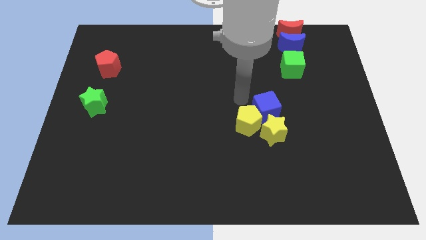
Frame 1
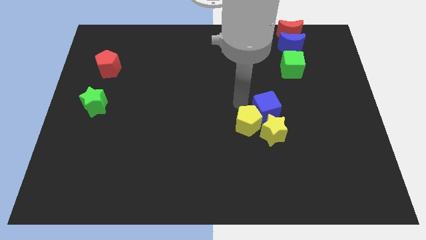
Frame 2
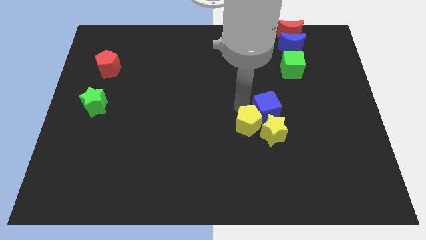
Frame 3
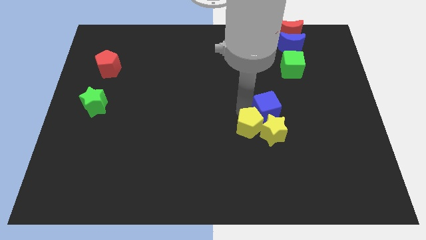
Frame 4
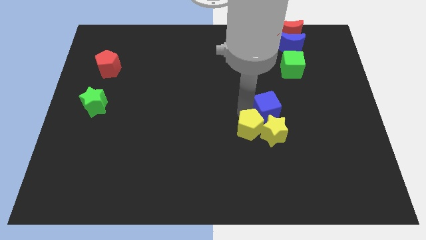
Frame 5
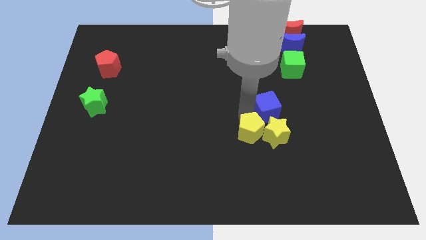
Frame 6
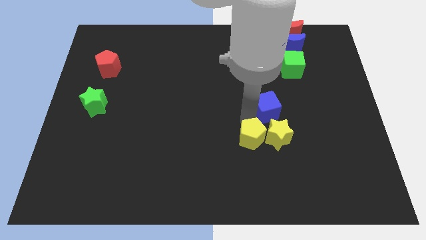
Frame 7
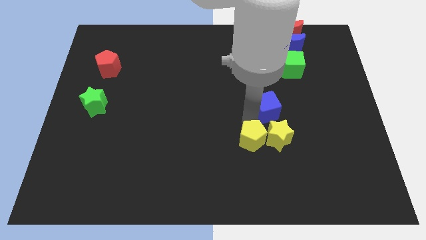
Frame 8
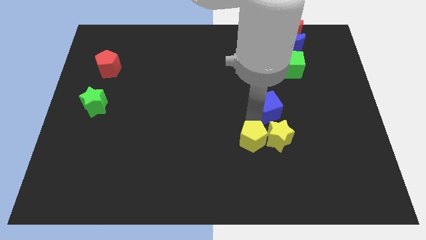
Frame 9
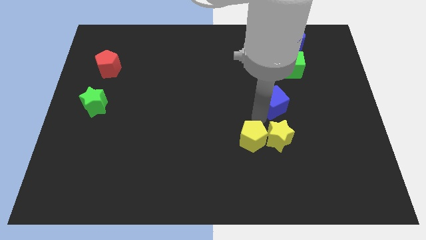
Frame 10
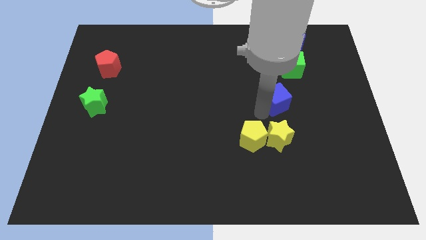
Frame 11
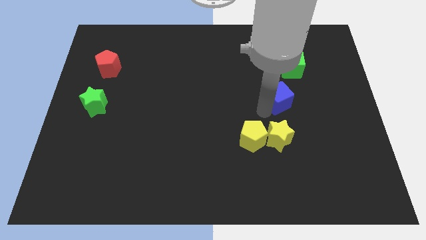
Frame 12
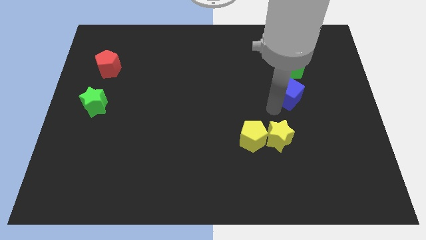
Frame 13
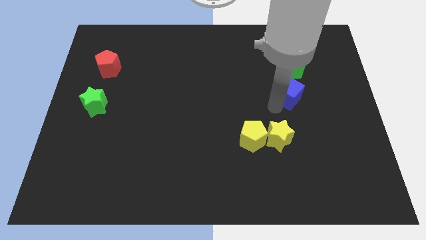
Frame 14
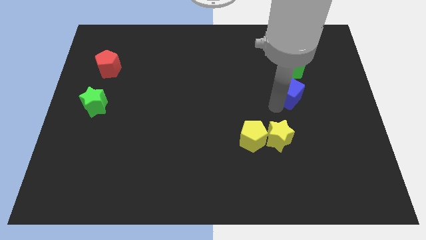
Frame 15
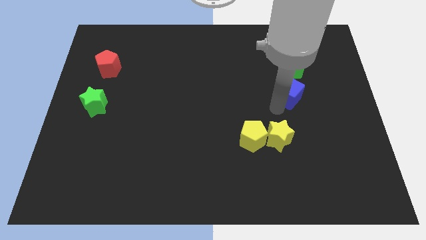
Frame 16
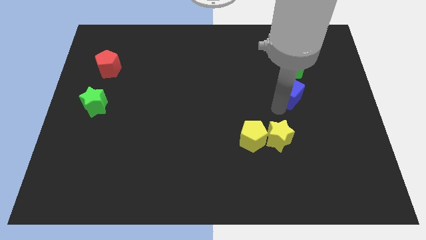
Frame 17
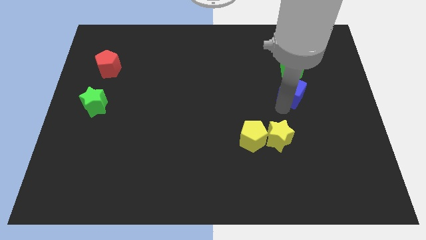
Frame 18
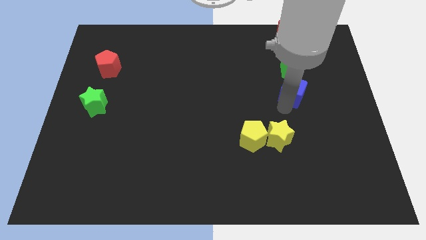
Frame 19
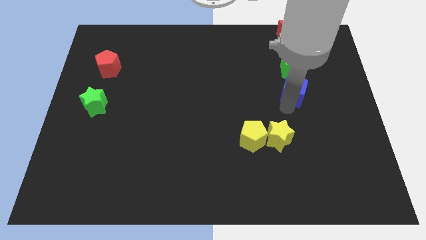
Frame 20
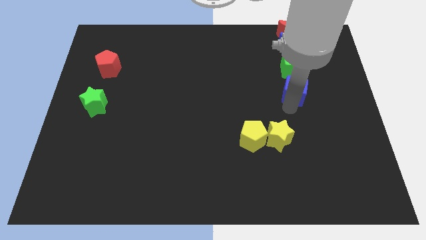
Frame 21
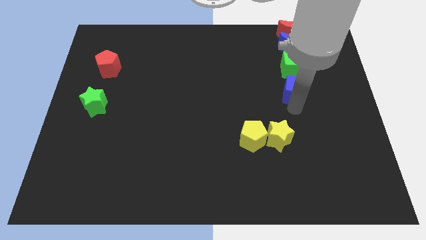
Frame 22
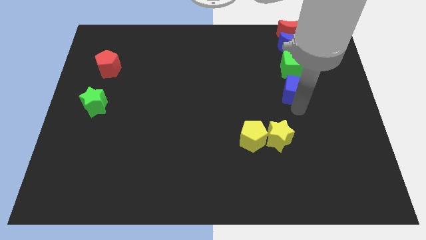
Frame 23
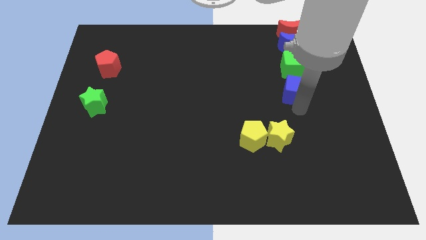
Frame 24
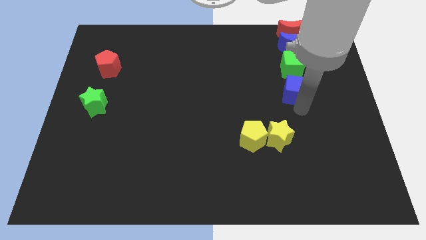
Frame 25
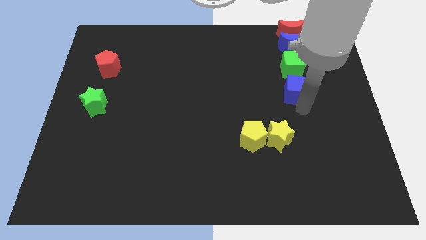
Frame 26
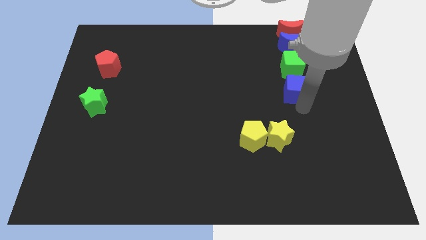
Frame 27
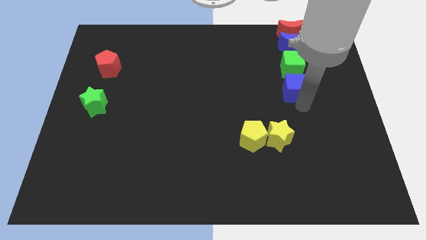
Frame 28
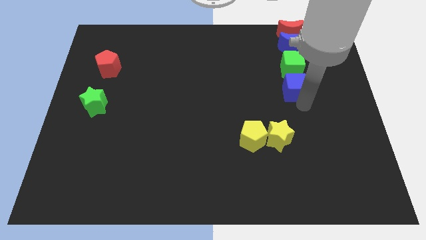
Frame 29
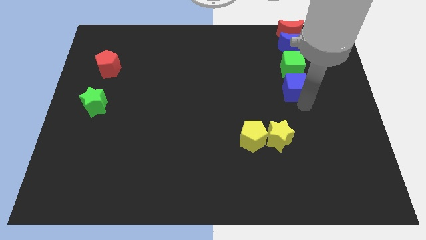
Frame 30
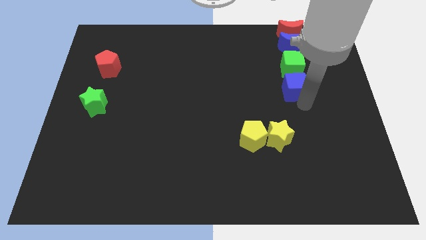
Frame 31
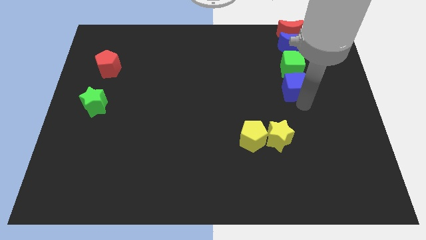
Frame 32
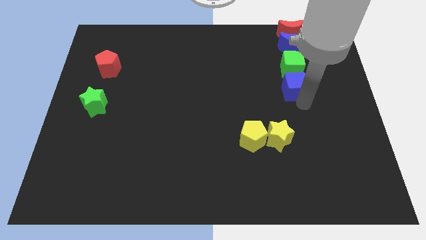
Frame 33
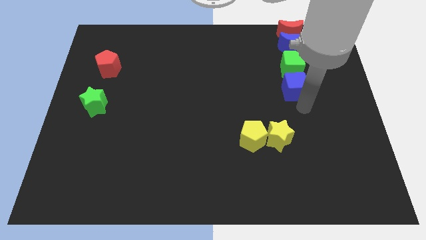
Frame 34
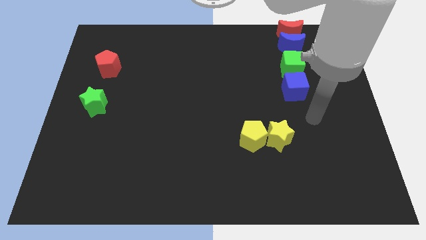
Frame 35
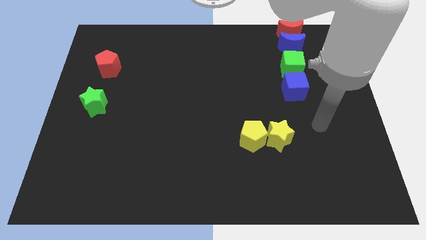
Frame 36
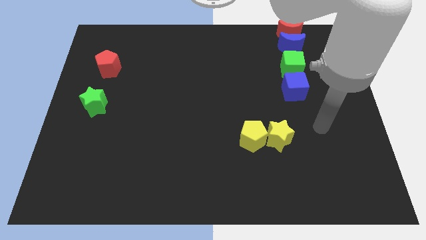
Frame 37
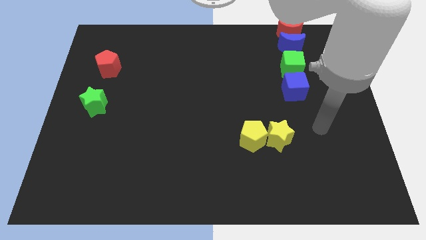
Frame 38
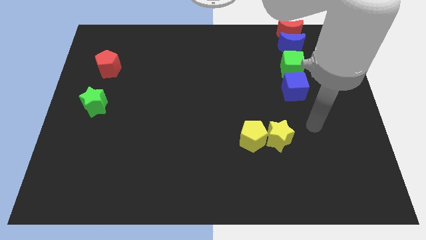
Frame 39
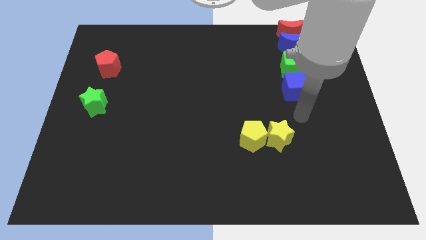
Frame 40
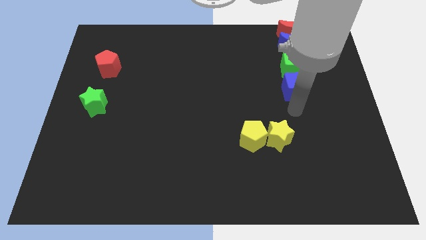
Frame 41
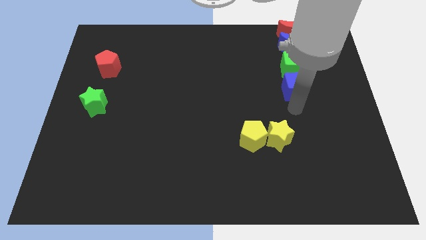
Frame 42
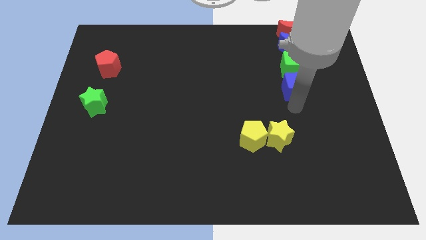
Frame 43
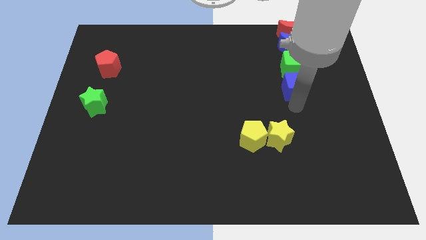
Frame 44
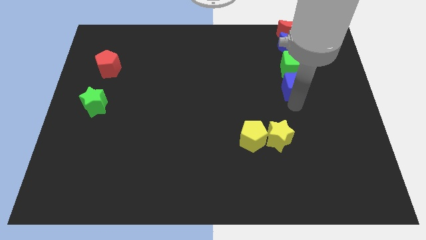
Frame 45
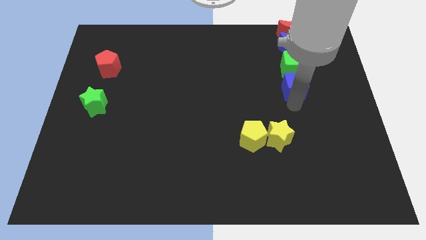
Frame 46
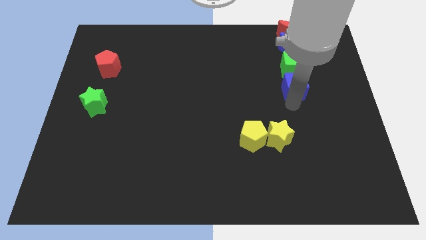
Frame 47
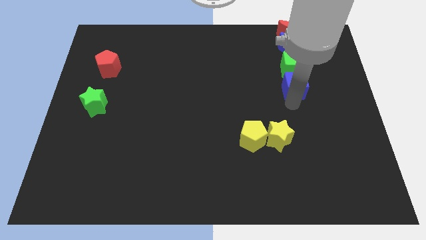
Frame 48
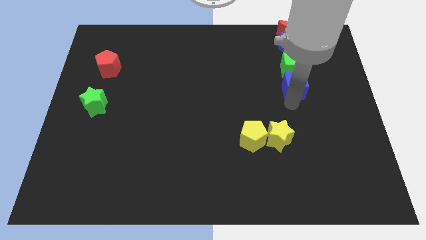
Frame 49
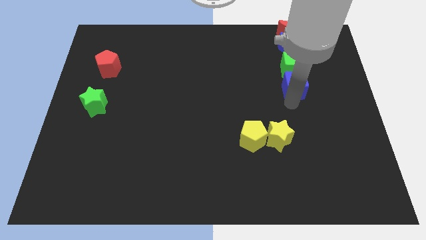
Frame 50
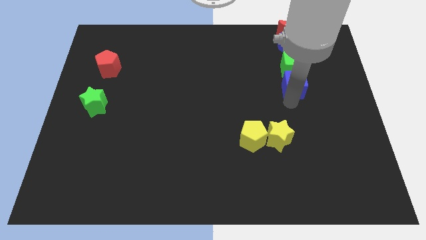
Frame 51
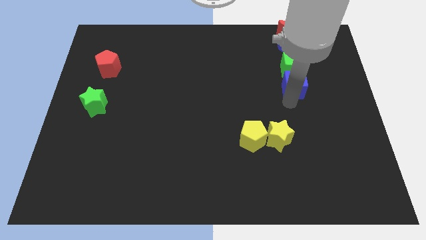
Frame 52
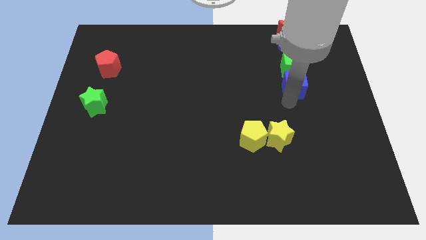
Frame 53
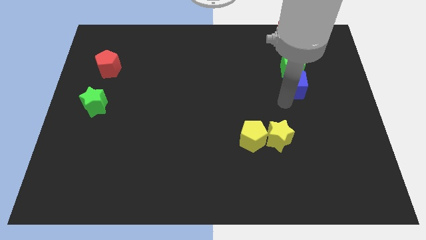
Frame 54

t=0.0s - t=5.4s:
push the blue cube bottom of the green cube

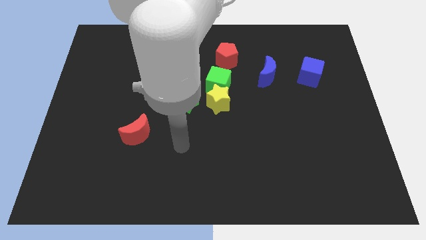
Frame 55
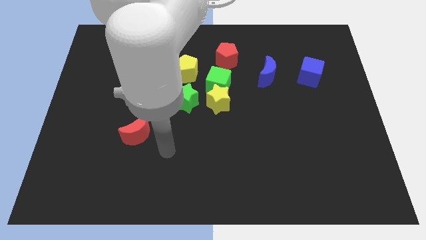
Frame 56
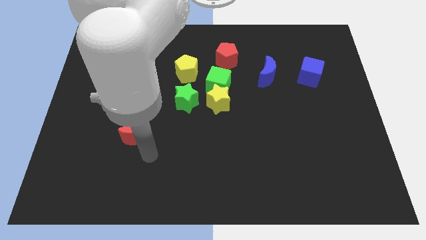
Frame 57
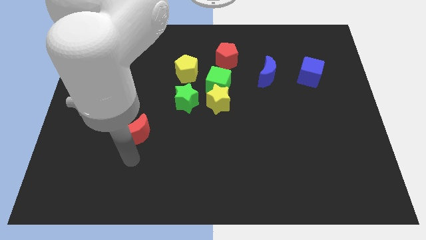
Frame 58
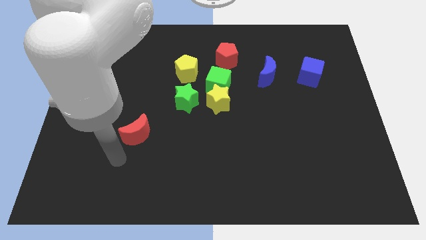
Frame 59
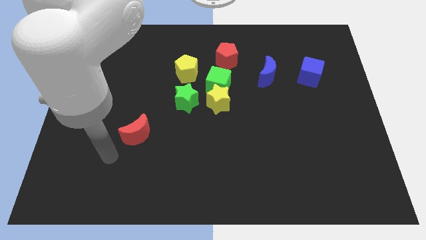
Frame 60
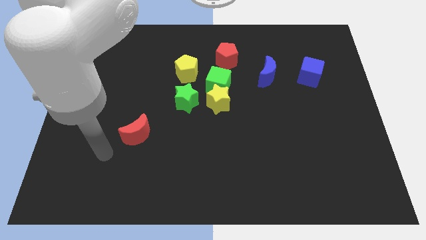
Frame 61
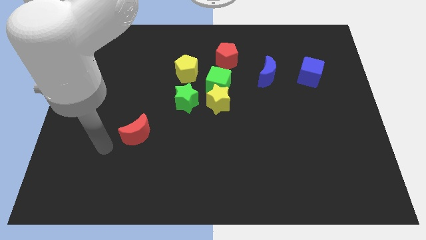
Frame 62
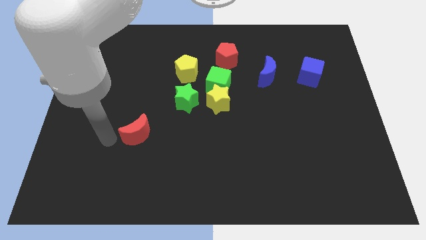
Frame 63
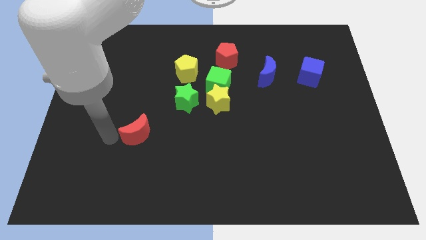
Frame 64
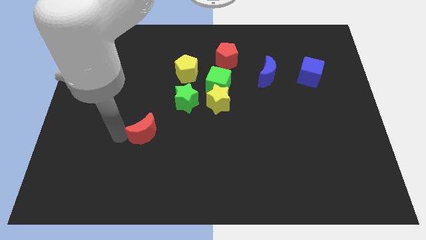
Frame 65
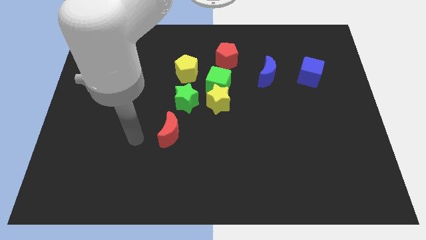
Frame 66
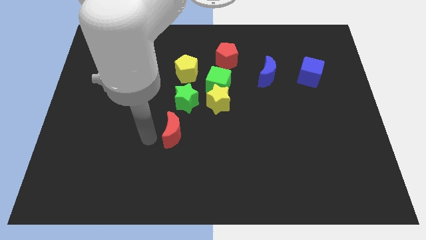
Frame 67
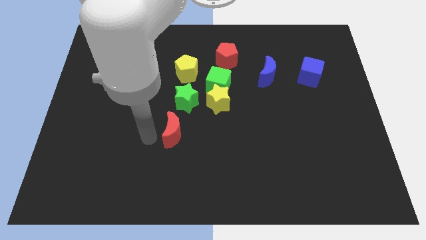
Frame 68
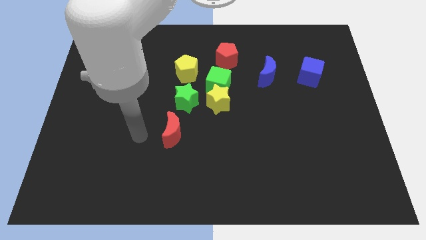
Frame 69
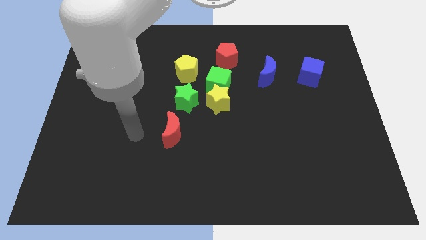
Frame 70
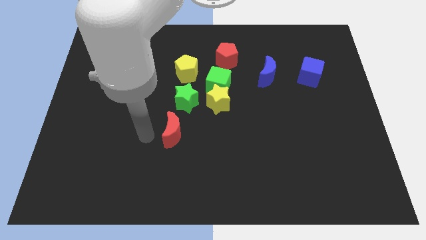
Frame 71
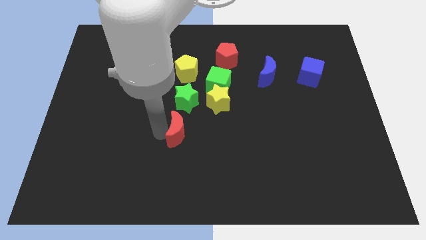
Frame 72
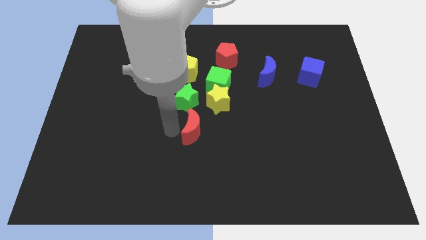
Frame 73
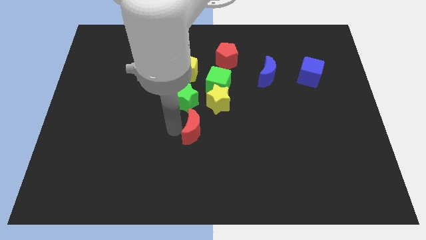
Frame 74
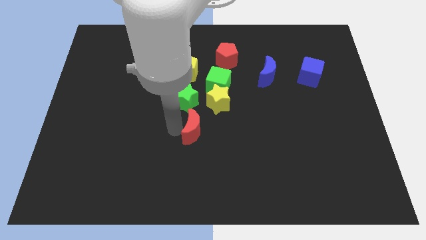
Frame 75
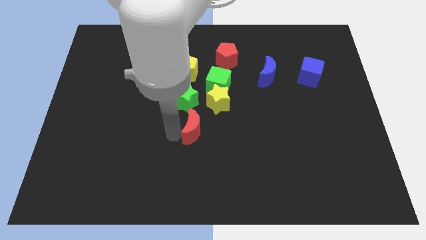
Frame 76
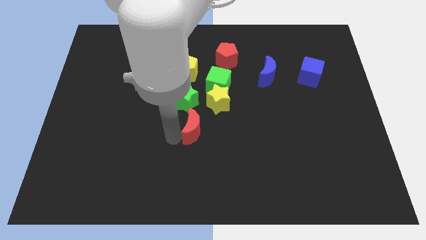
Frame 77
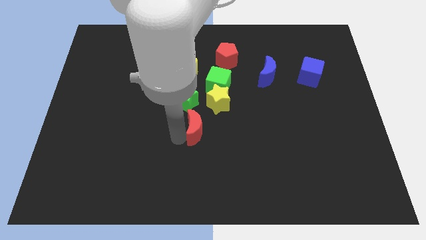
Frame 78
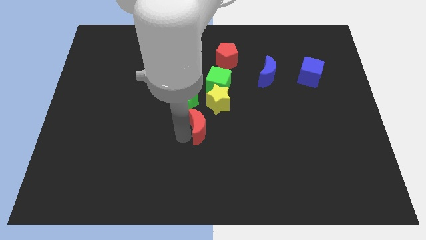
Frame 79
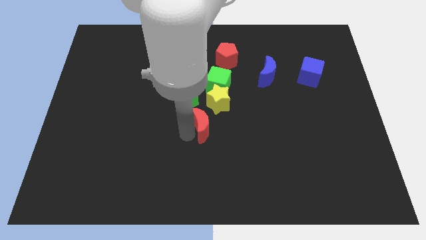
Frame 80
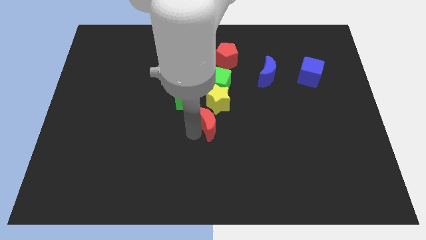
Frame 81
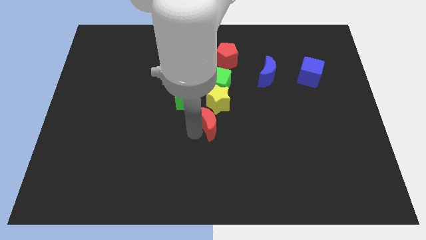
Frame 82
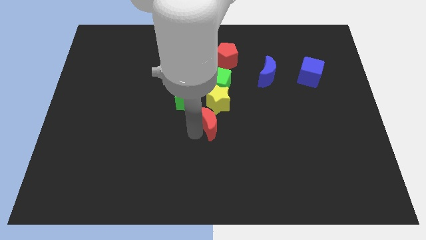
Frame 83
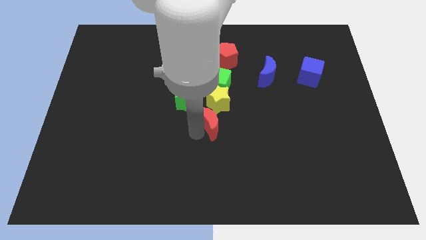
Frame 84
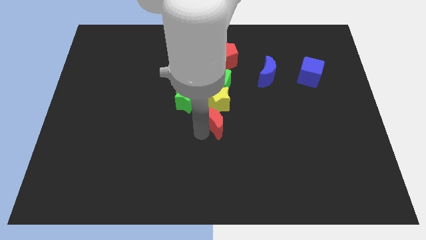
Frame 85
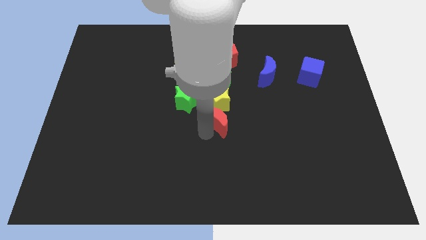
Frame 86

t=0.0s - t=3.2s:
place red moon below yellow star

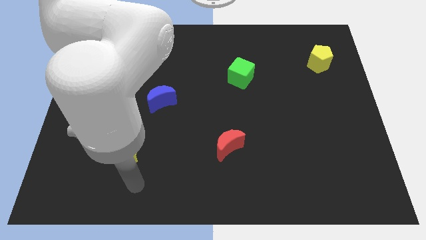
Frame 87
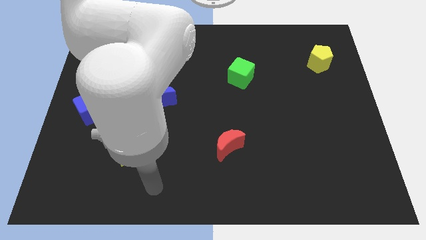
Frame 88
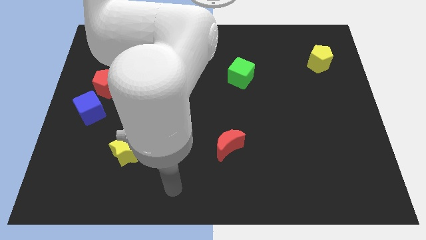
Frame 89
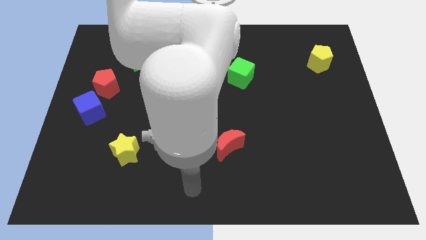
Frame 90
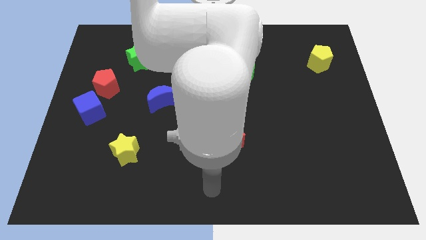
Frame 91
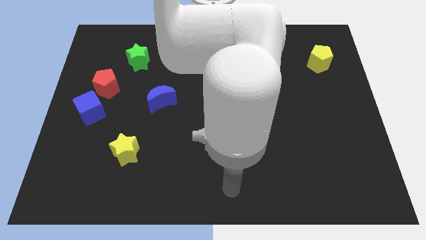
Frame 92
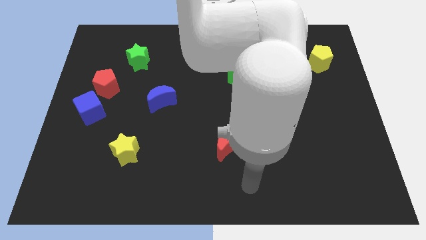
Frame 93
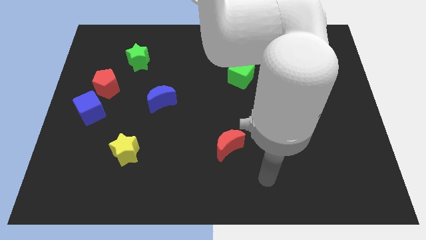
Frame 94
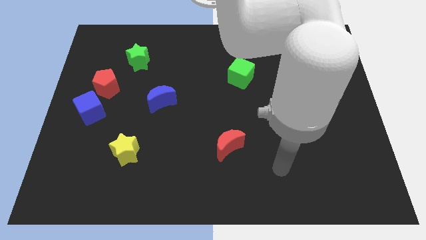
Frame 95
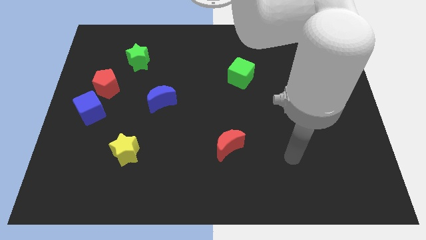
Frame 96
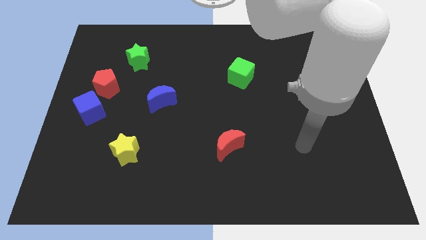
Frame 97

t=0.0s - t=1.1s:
move arm away from yellow star
